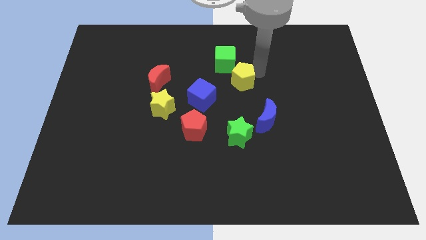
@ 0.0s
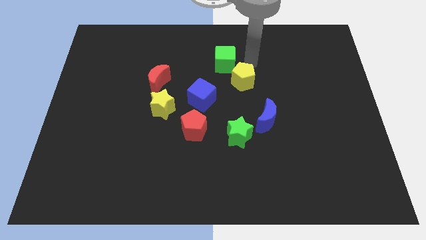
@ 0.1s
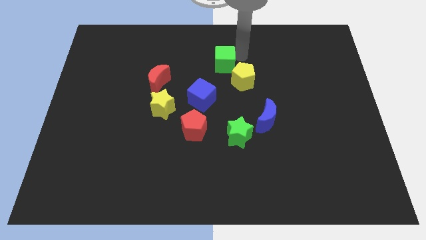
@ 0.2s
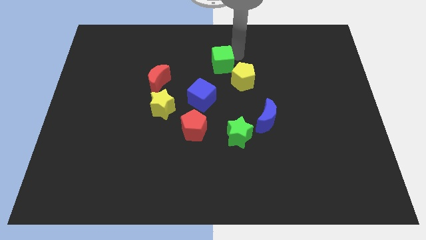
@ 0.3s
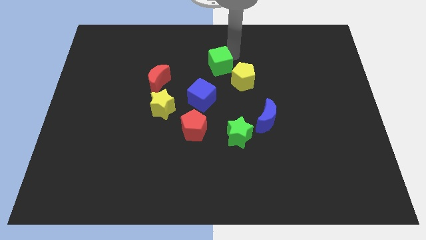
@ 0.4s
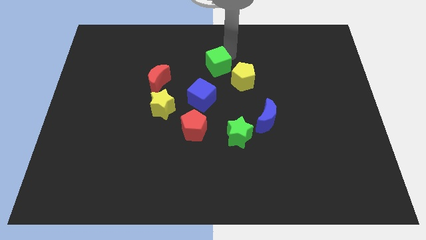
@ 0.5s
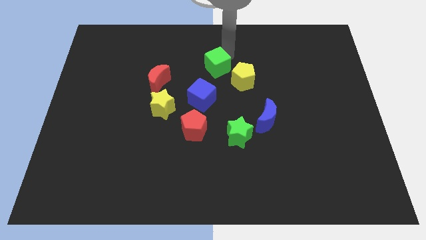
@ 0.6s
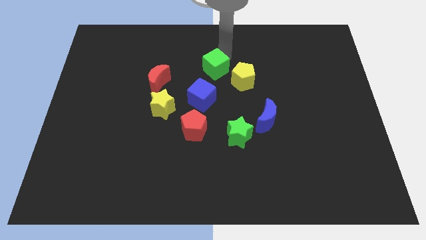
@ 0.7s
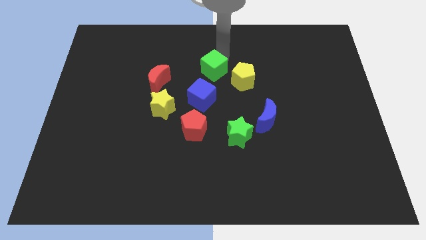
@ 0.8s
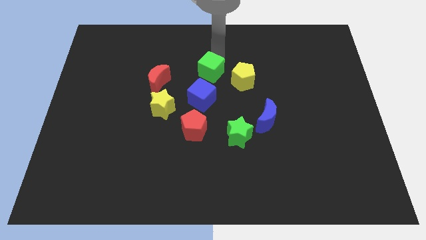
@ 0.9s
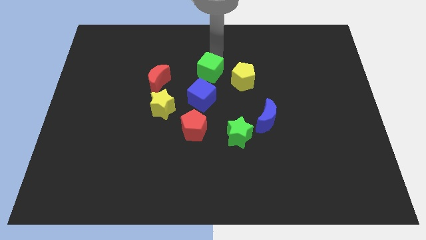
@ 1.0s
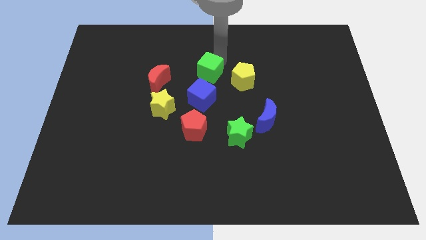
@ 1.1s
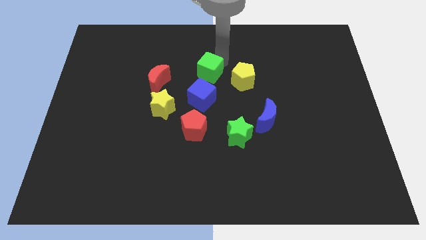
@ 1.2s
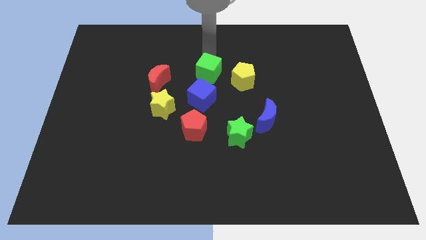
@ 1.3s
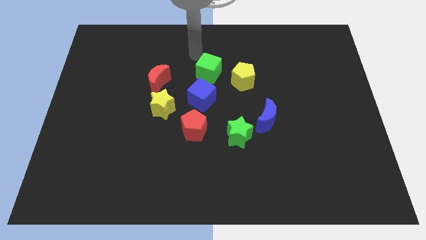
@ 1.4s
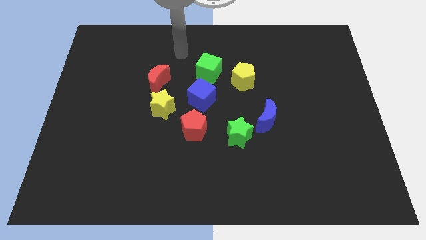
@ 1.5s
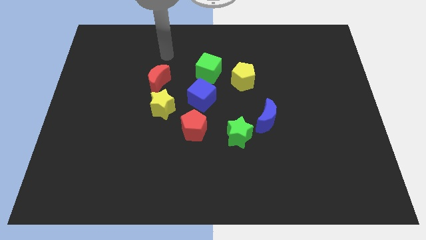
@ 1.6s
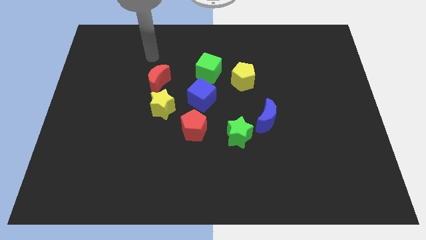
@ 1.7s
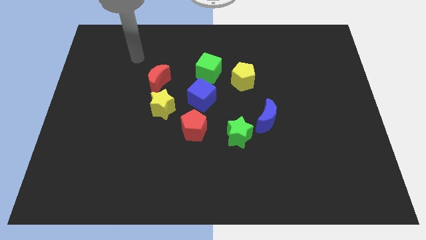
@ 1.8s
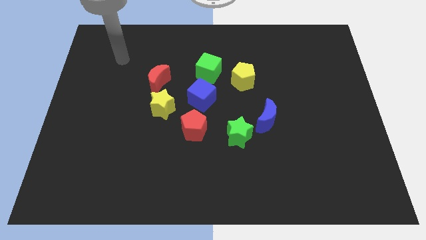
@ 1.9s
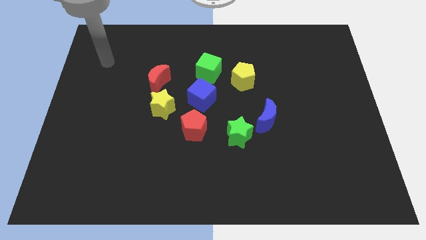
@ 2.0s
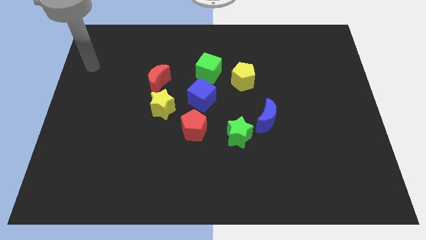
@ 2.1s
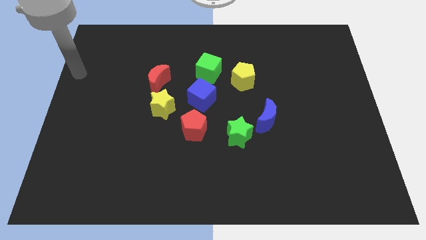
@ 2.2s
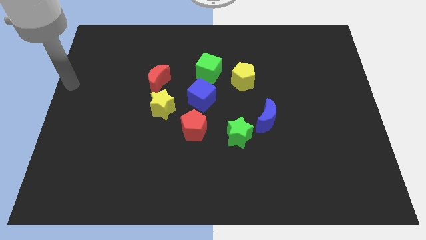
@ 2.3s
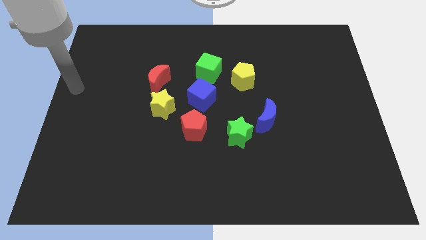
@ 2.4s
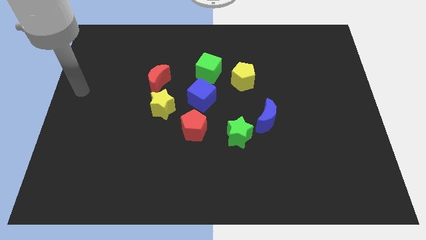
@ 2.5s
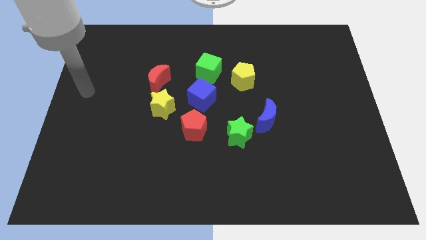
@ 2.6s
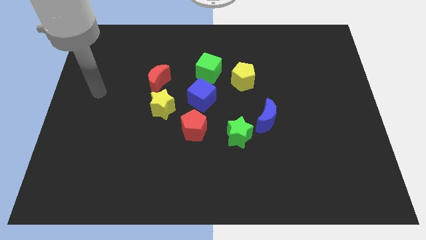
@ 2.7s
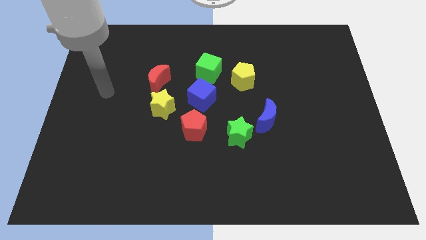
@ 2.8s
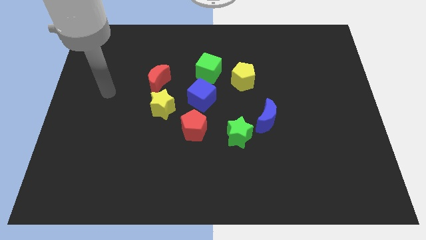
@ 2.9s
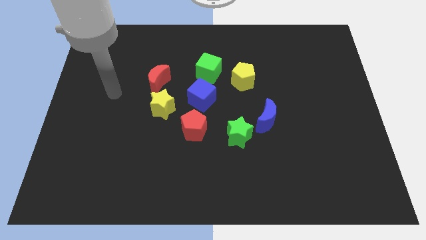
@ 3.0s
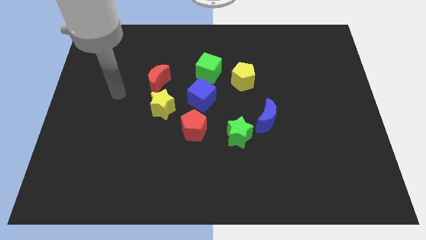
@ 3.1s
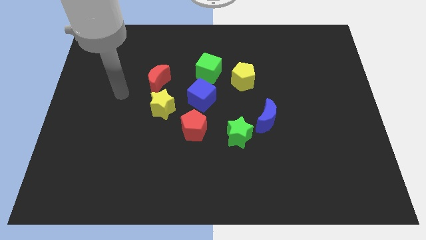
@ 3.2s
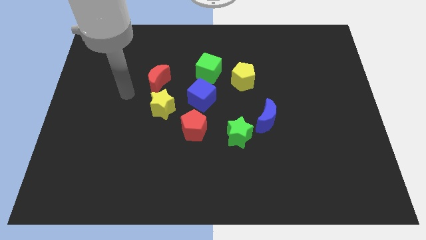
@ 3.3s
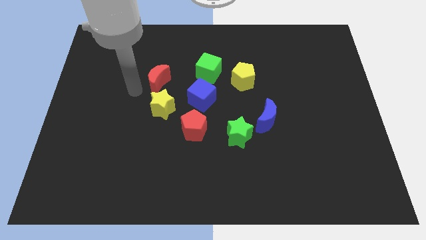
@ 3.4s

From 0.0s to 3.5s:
place the green cube above the blue cube

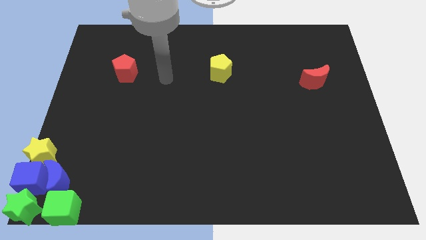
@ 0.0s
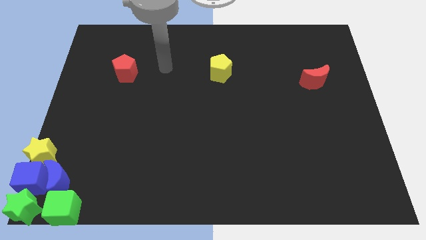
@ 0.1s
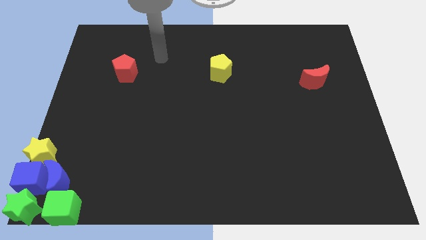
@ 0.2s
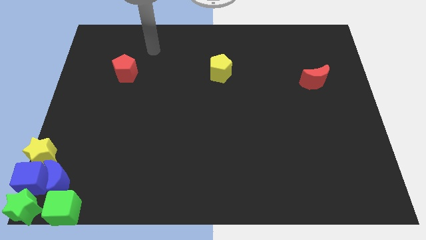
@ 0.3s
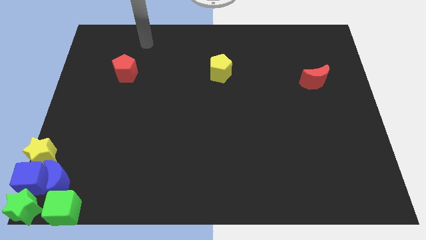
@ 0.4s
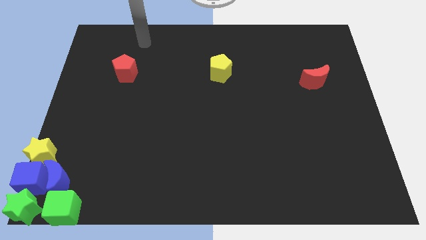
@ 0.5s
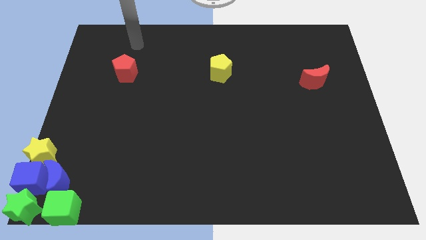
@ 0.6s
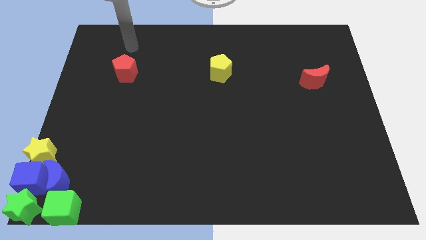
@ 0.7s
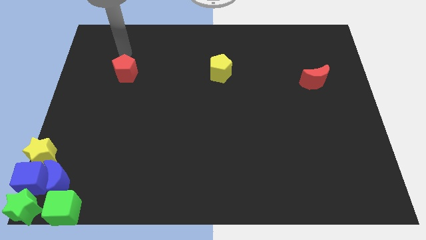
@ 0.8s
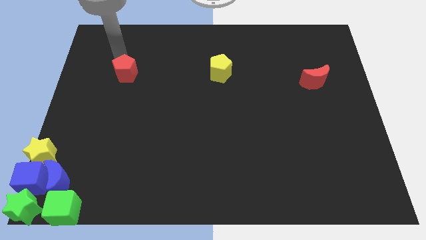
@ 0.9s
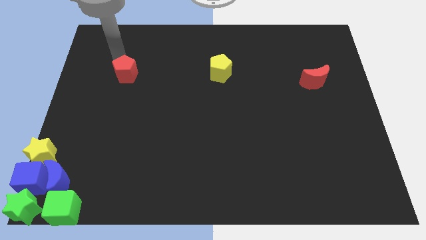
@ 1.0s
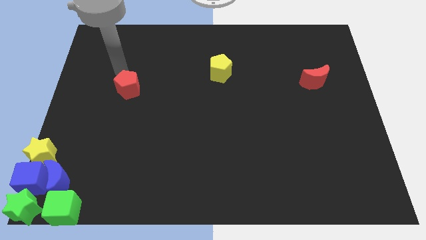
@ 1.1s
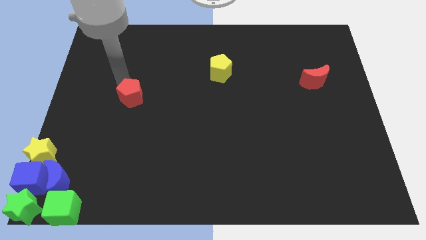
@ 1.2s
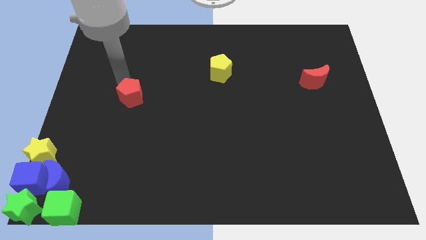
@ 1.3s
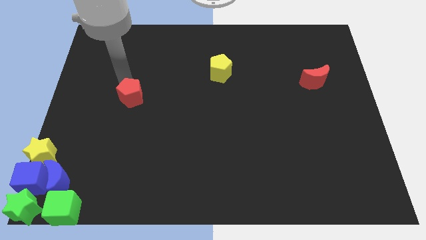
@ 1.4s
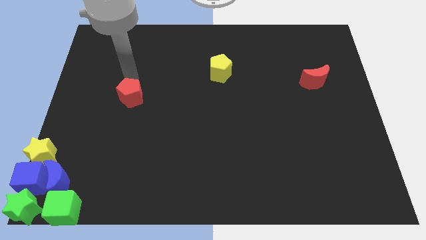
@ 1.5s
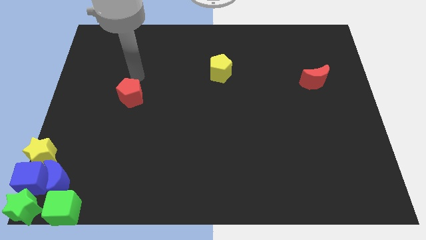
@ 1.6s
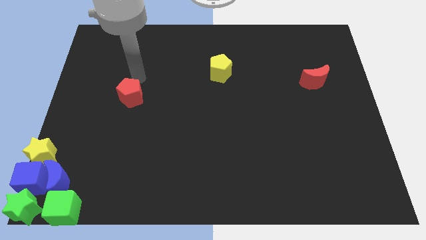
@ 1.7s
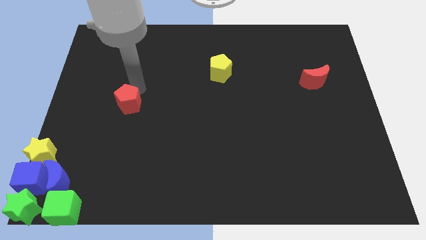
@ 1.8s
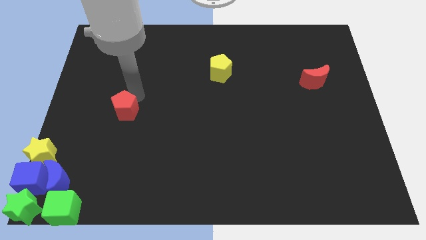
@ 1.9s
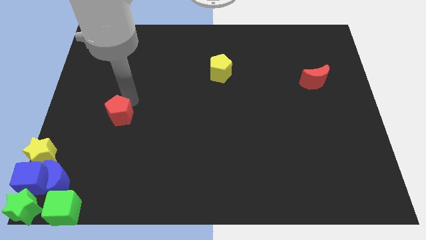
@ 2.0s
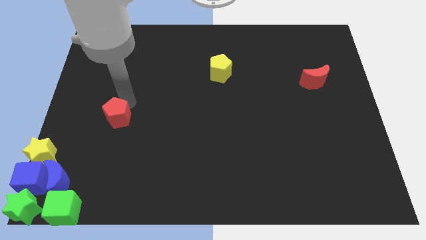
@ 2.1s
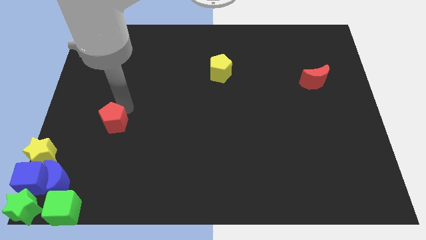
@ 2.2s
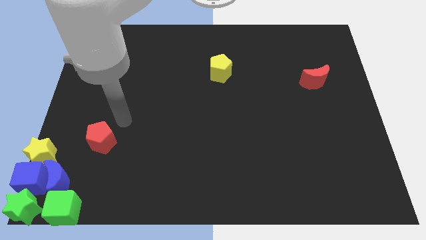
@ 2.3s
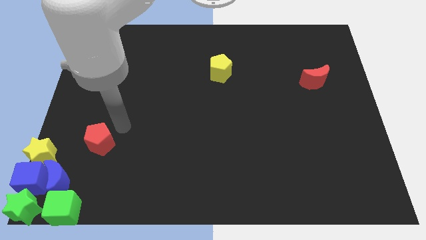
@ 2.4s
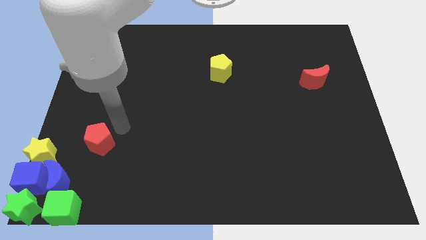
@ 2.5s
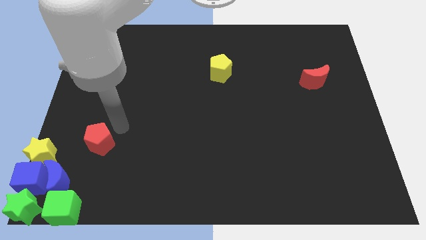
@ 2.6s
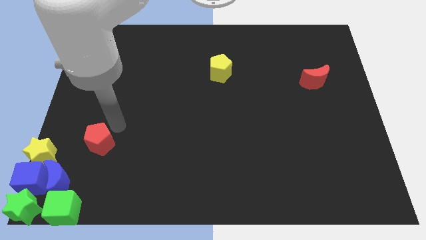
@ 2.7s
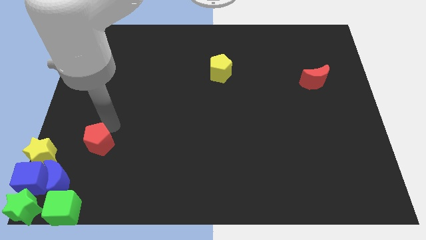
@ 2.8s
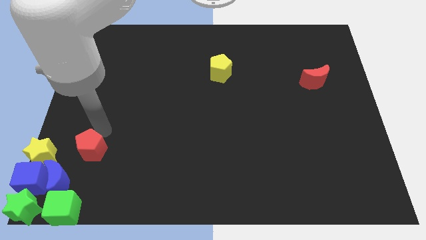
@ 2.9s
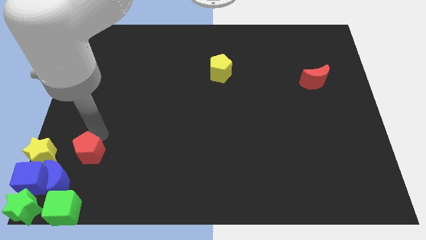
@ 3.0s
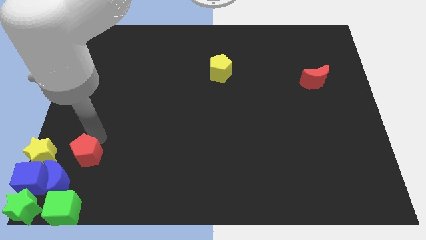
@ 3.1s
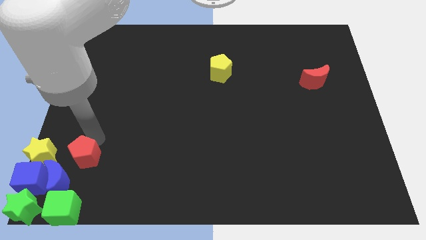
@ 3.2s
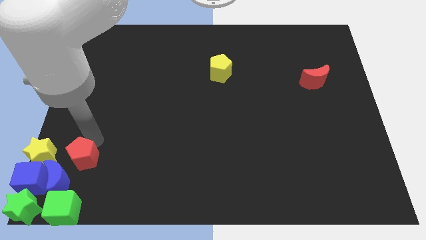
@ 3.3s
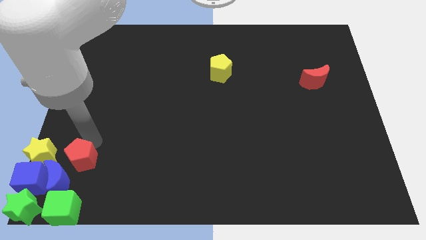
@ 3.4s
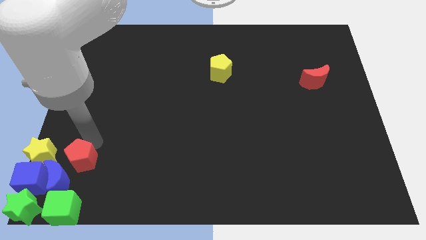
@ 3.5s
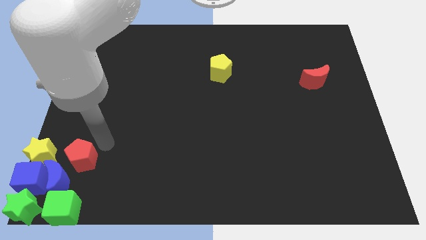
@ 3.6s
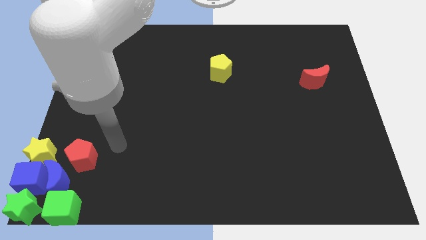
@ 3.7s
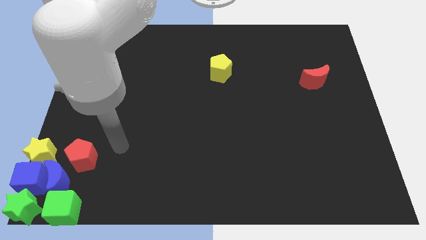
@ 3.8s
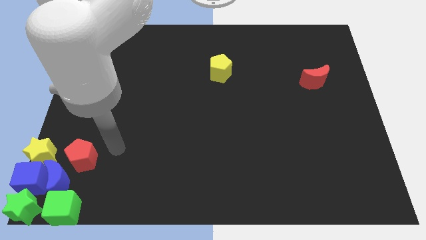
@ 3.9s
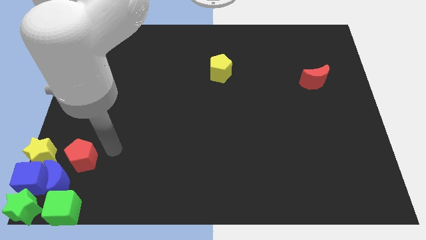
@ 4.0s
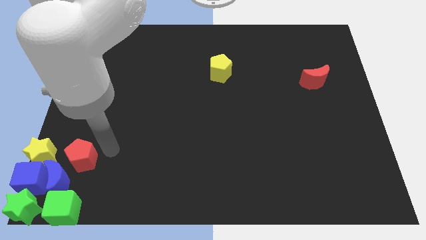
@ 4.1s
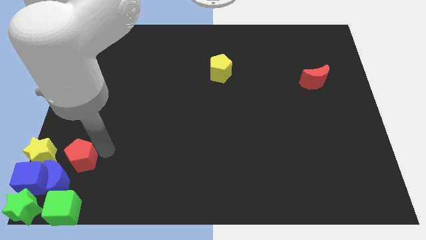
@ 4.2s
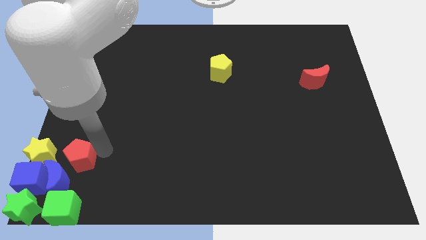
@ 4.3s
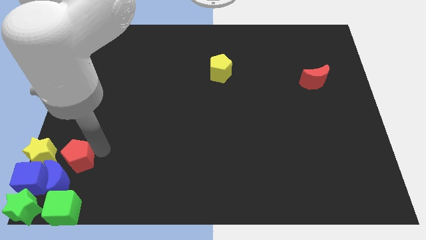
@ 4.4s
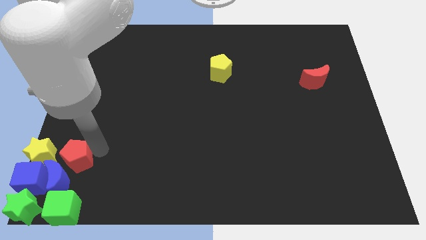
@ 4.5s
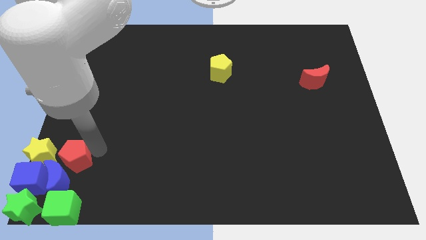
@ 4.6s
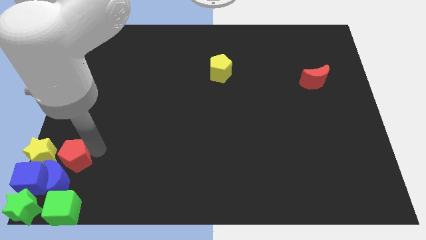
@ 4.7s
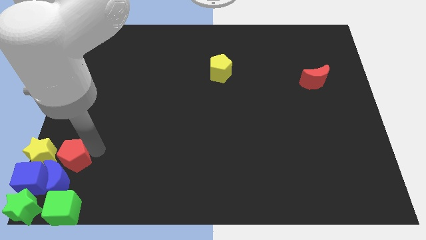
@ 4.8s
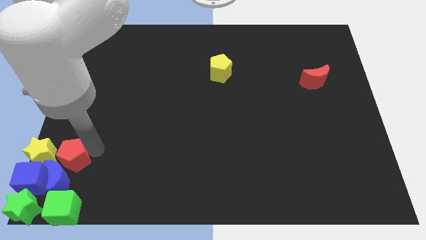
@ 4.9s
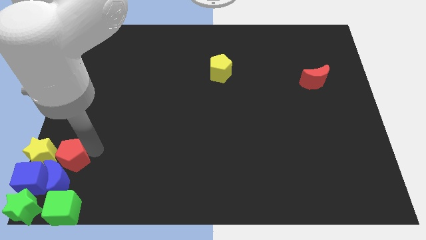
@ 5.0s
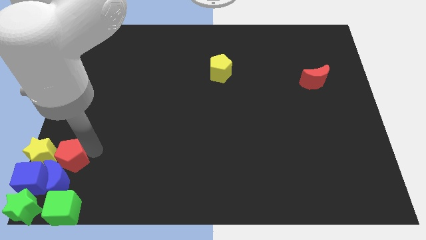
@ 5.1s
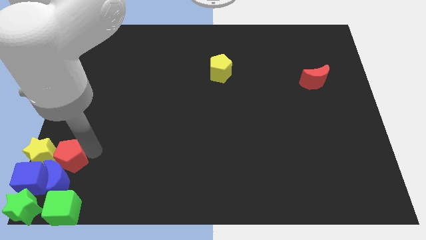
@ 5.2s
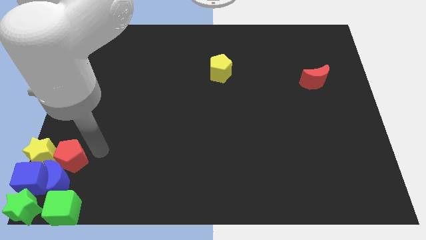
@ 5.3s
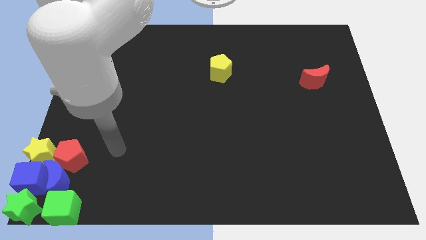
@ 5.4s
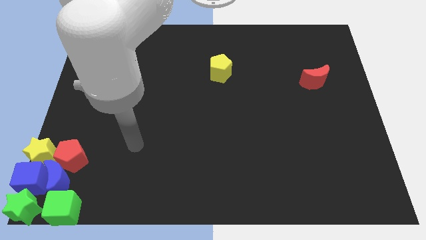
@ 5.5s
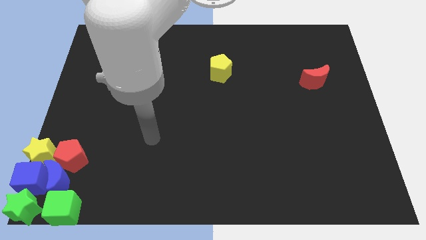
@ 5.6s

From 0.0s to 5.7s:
push red pentagon to left bottom of the board
